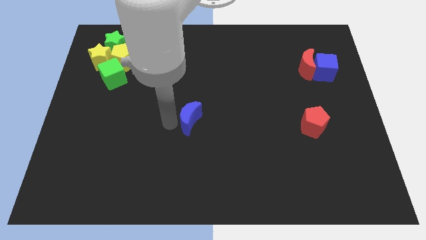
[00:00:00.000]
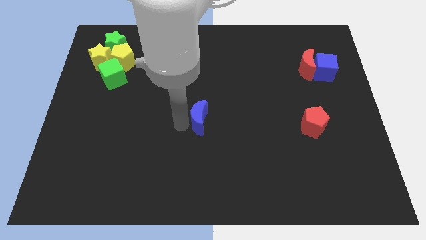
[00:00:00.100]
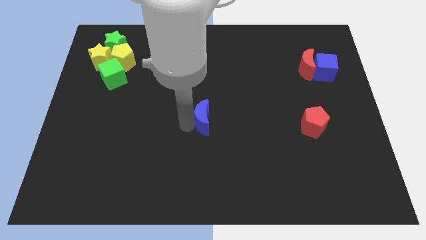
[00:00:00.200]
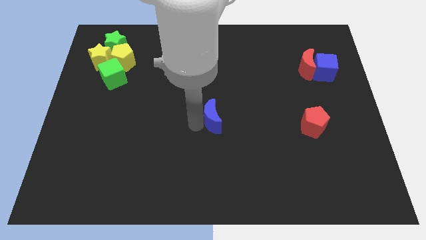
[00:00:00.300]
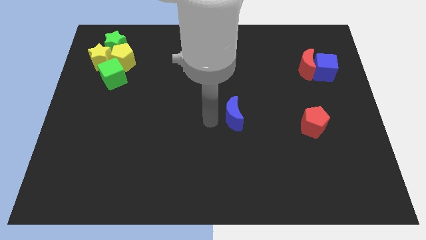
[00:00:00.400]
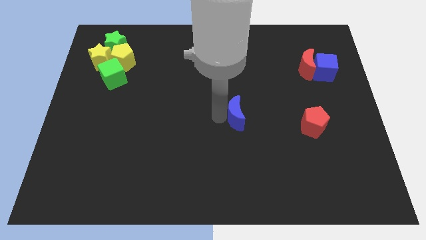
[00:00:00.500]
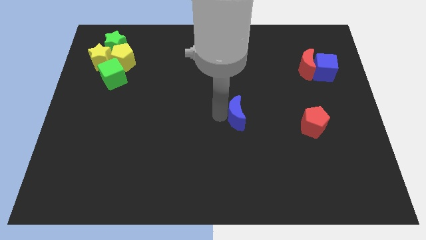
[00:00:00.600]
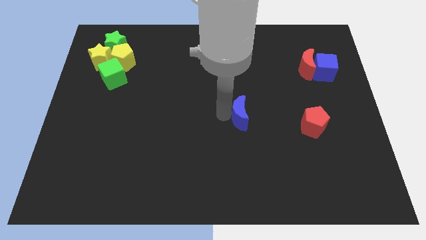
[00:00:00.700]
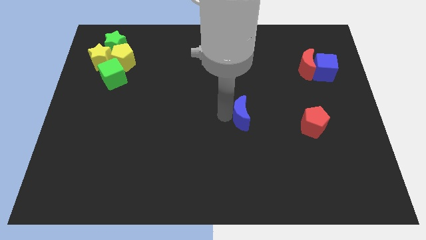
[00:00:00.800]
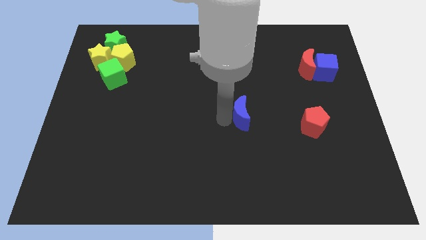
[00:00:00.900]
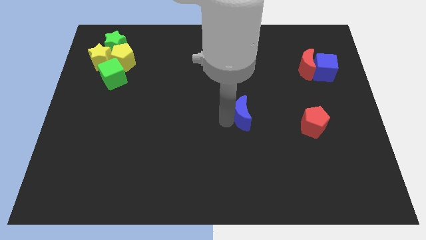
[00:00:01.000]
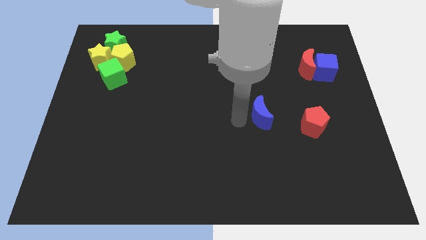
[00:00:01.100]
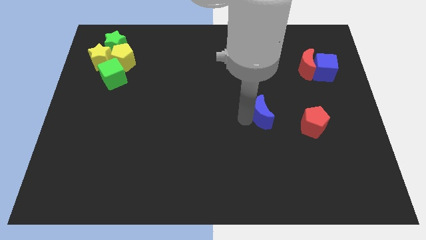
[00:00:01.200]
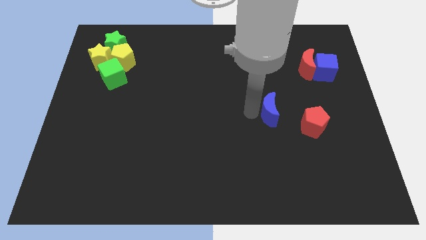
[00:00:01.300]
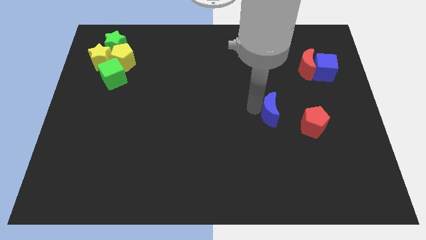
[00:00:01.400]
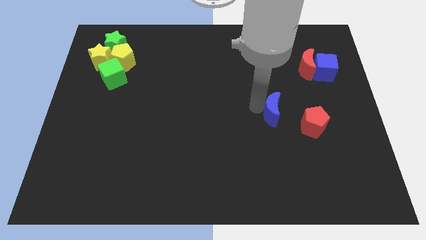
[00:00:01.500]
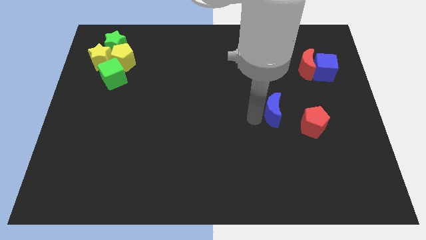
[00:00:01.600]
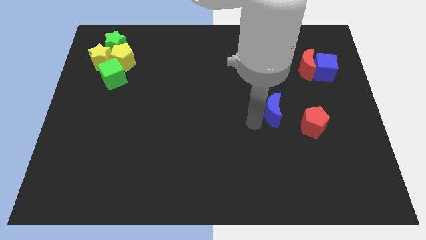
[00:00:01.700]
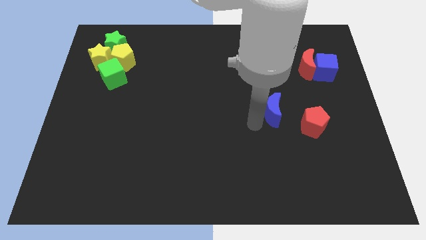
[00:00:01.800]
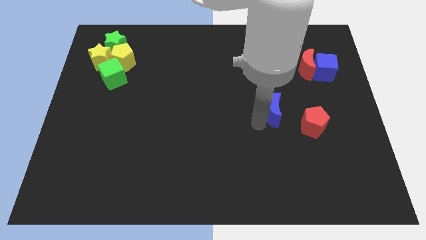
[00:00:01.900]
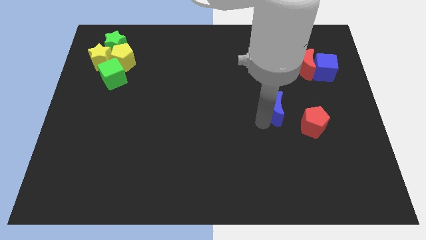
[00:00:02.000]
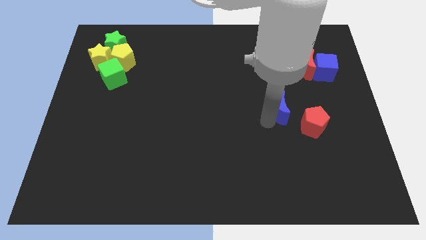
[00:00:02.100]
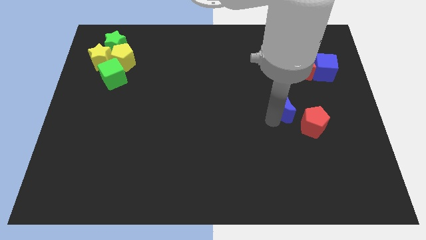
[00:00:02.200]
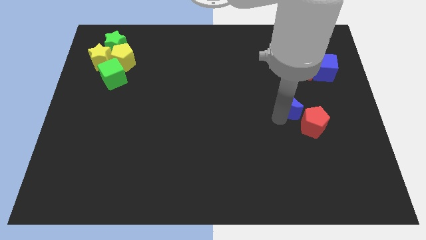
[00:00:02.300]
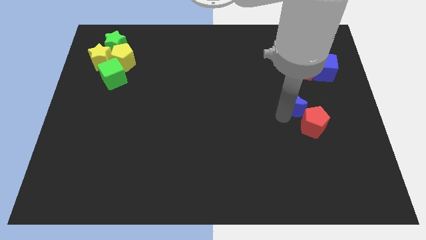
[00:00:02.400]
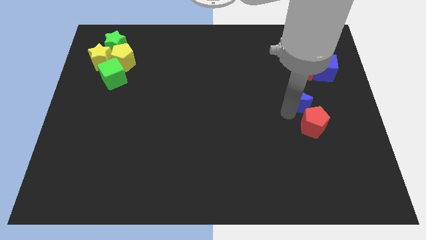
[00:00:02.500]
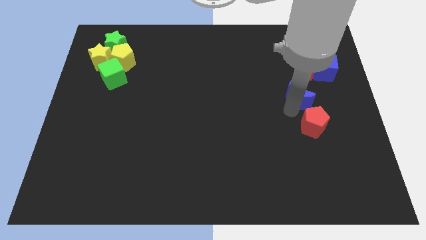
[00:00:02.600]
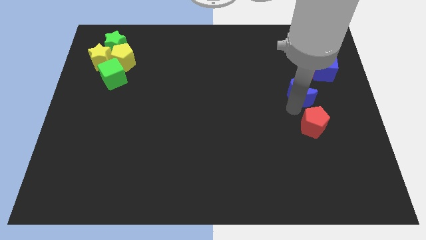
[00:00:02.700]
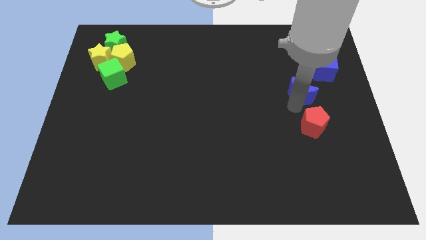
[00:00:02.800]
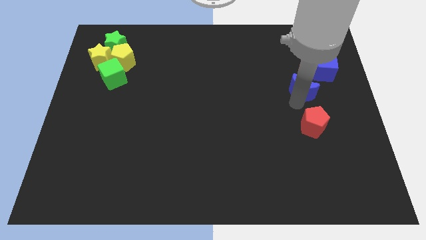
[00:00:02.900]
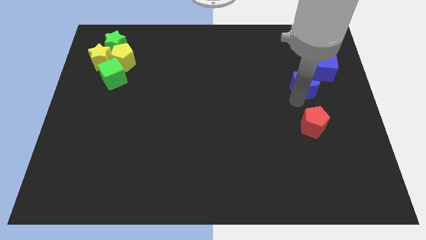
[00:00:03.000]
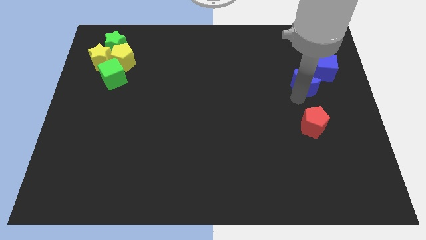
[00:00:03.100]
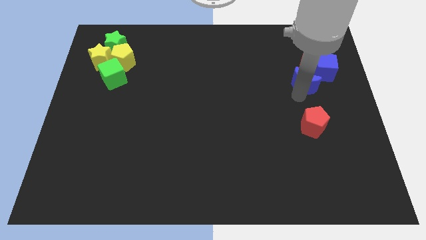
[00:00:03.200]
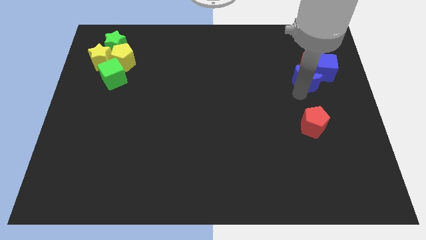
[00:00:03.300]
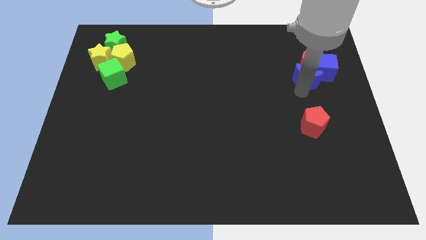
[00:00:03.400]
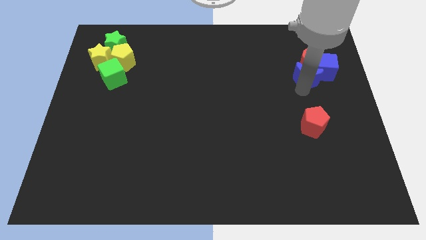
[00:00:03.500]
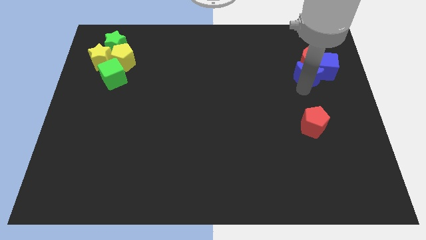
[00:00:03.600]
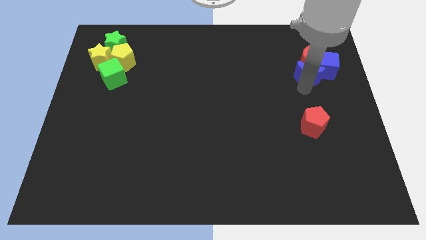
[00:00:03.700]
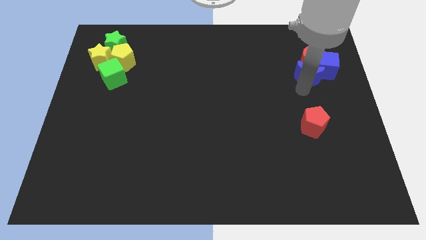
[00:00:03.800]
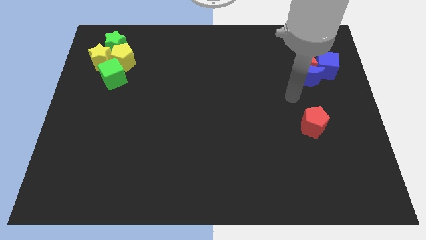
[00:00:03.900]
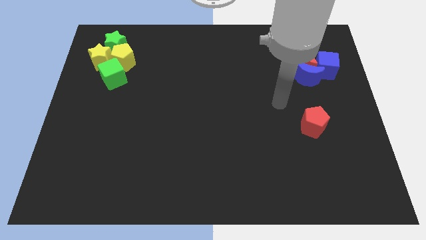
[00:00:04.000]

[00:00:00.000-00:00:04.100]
move blue moon into the group of blocks

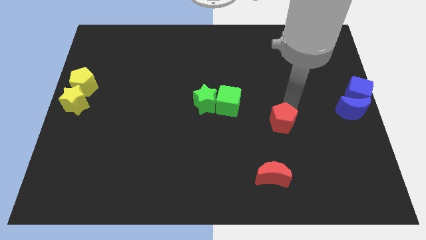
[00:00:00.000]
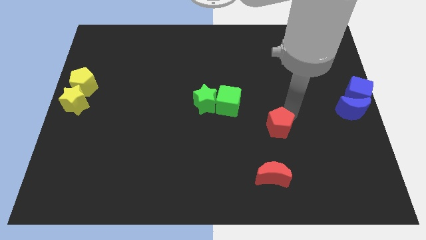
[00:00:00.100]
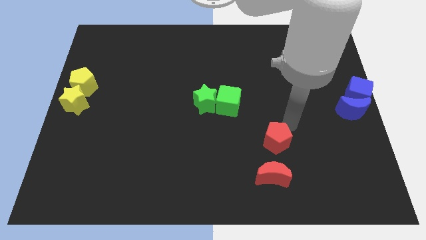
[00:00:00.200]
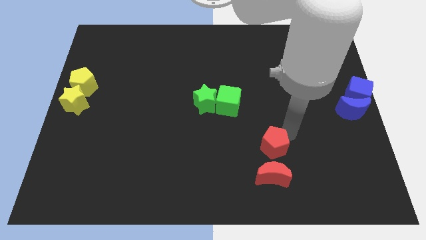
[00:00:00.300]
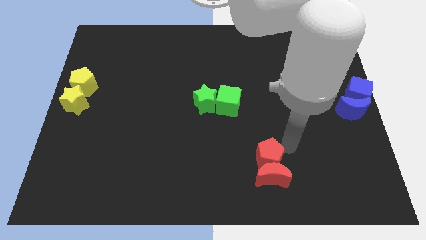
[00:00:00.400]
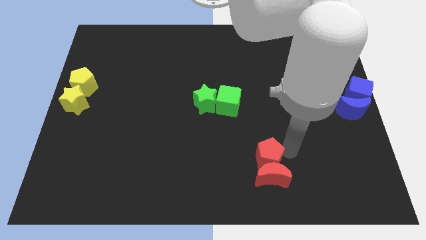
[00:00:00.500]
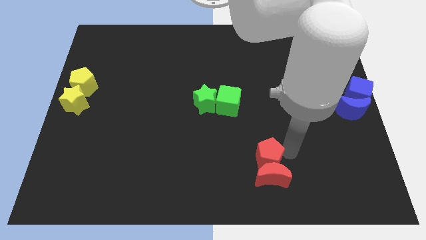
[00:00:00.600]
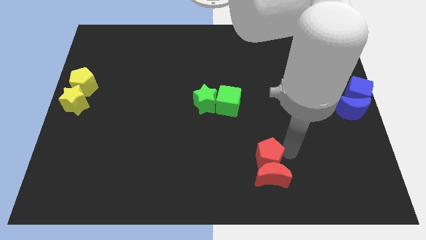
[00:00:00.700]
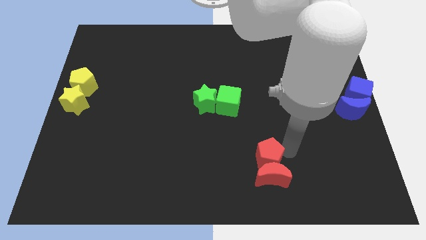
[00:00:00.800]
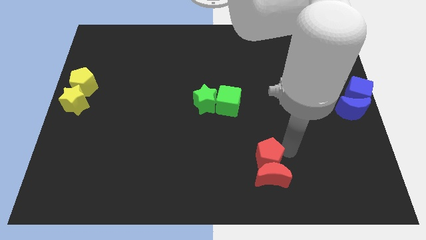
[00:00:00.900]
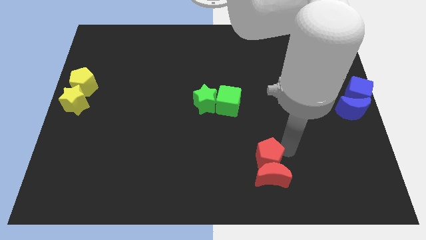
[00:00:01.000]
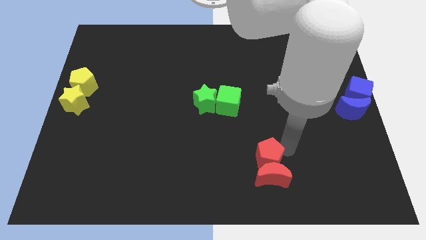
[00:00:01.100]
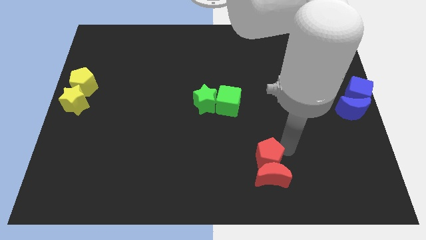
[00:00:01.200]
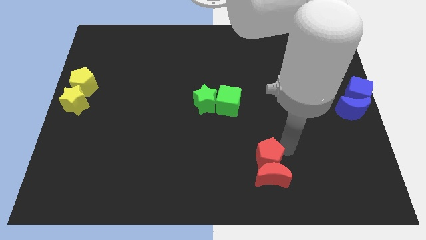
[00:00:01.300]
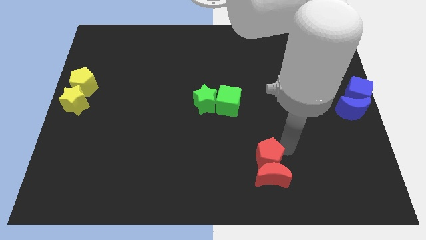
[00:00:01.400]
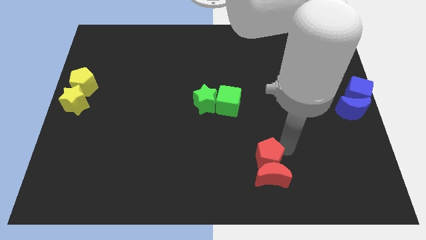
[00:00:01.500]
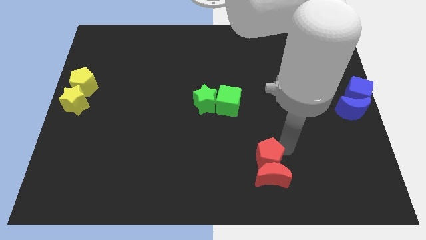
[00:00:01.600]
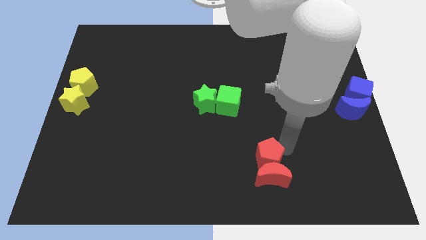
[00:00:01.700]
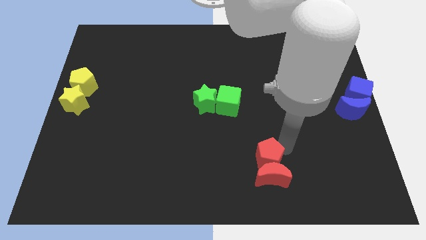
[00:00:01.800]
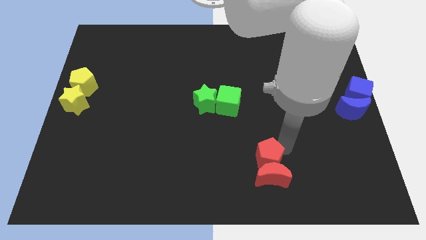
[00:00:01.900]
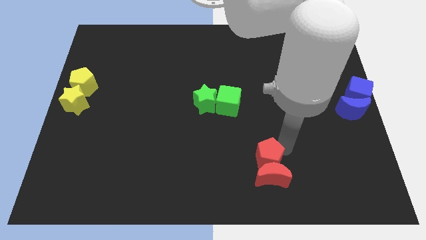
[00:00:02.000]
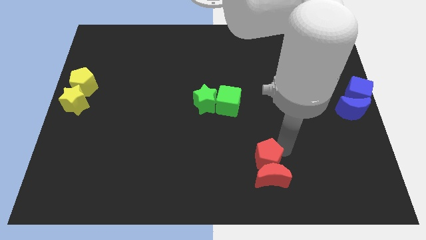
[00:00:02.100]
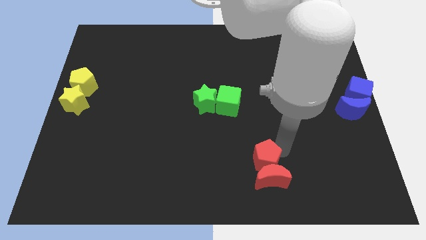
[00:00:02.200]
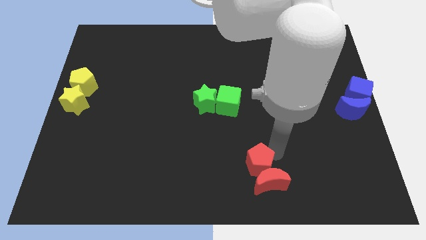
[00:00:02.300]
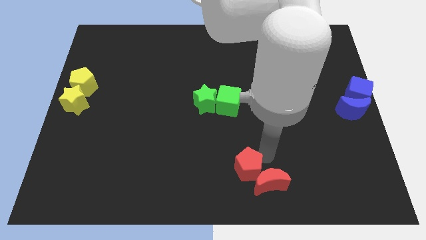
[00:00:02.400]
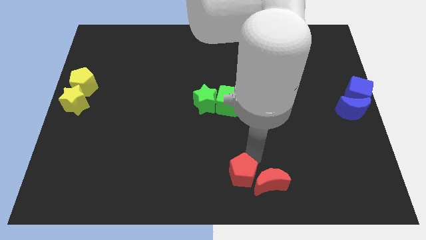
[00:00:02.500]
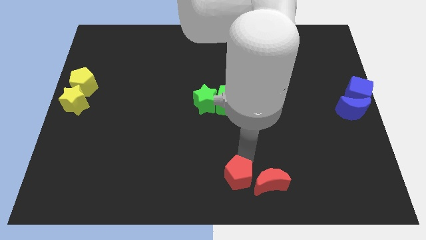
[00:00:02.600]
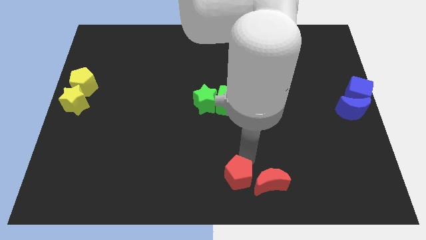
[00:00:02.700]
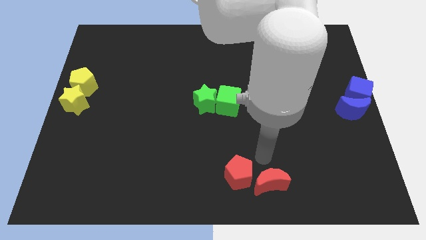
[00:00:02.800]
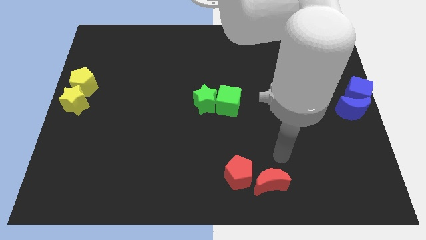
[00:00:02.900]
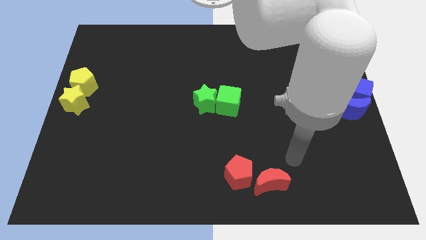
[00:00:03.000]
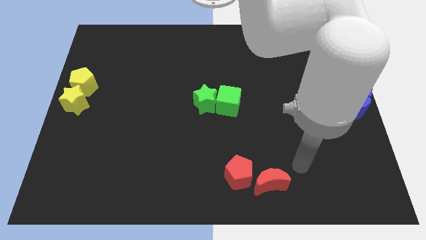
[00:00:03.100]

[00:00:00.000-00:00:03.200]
push the red pentagon into the red crescent

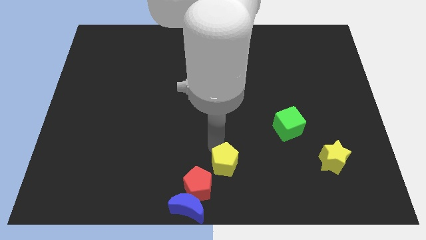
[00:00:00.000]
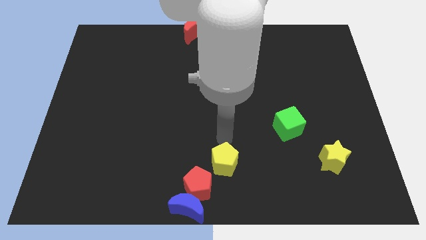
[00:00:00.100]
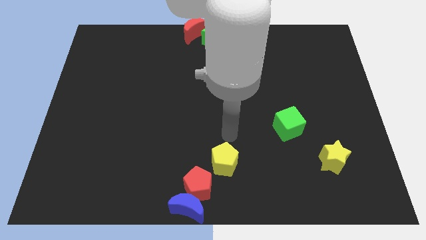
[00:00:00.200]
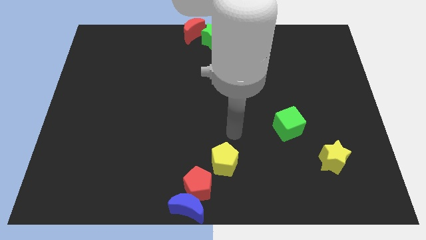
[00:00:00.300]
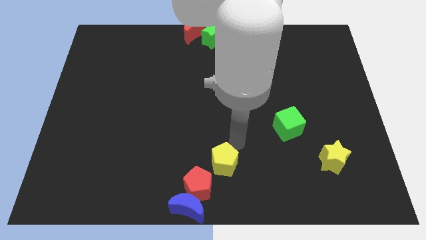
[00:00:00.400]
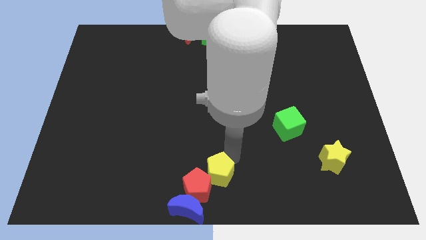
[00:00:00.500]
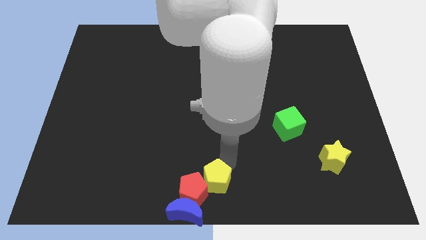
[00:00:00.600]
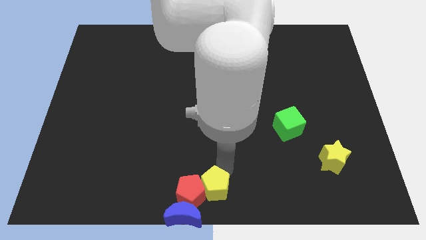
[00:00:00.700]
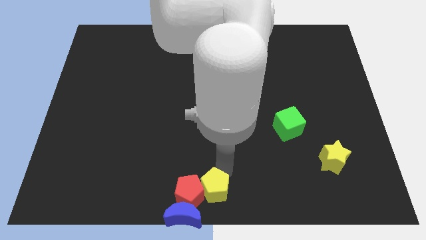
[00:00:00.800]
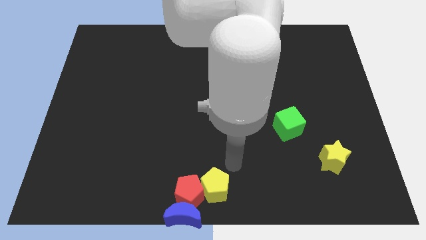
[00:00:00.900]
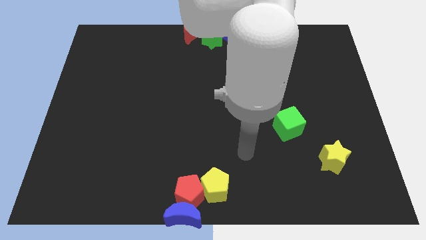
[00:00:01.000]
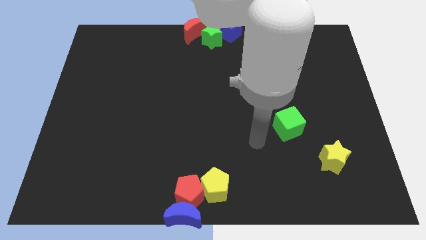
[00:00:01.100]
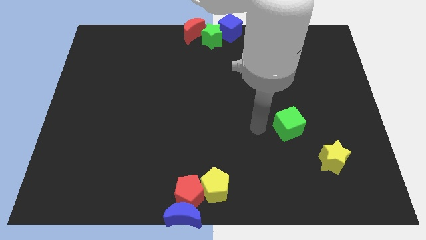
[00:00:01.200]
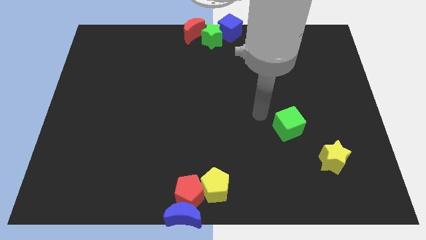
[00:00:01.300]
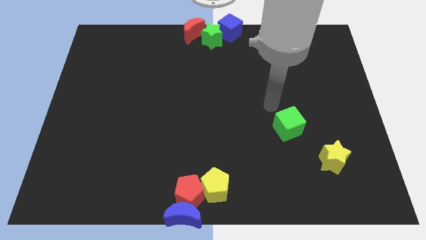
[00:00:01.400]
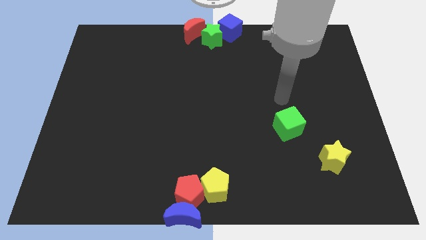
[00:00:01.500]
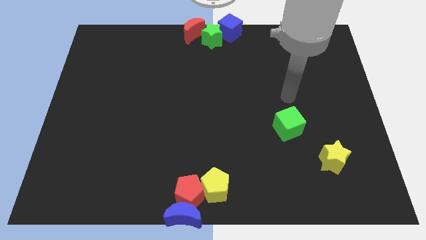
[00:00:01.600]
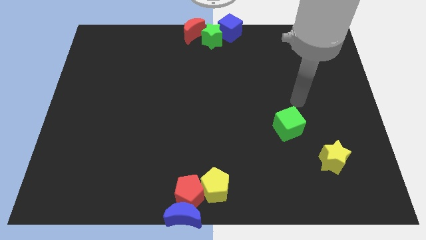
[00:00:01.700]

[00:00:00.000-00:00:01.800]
place the yellow pentagon to the right side of the red pentagon
